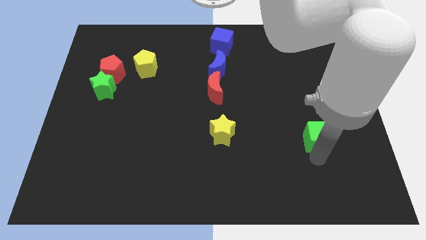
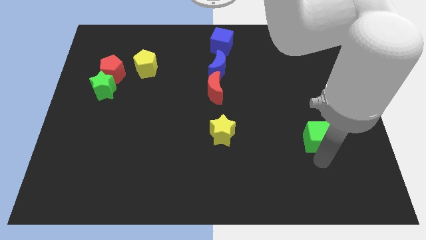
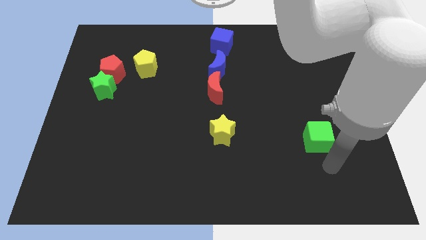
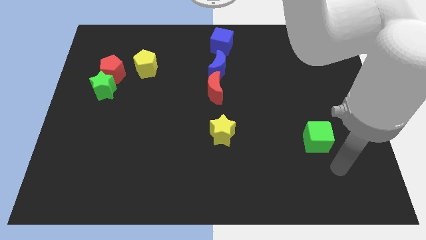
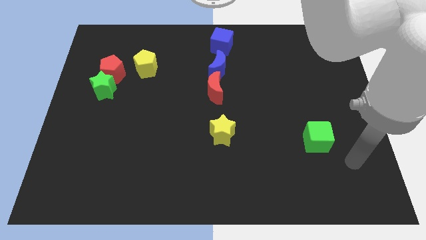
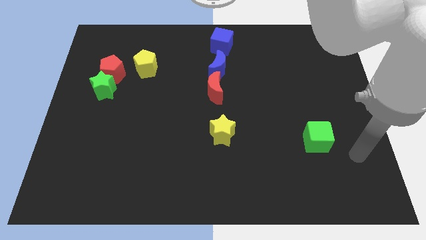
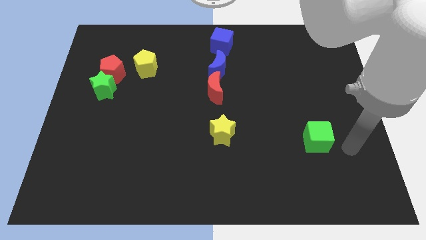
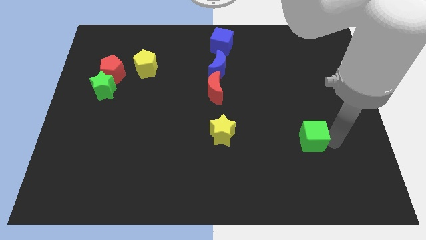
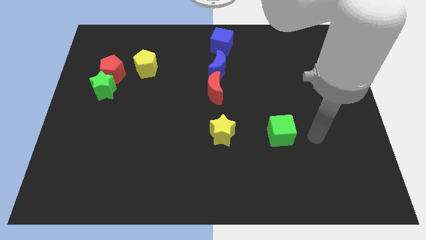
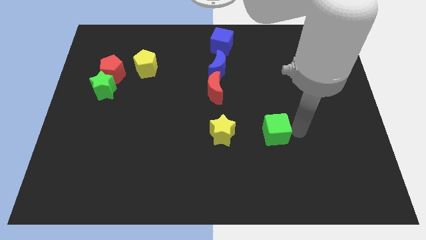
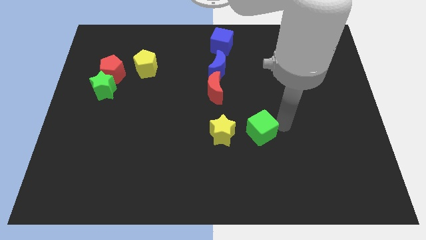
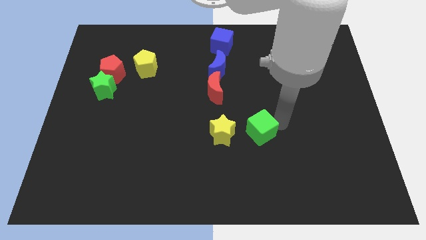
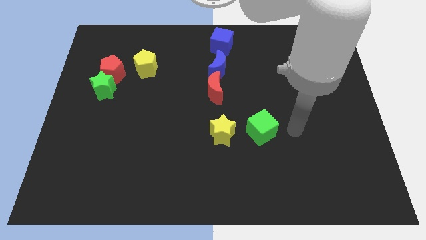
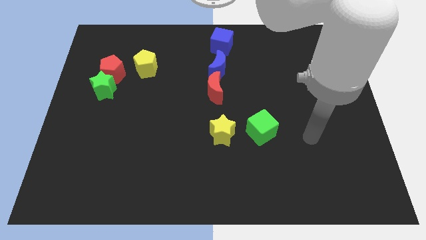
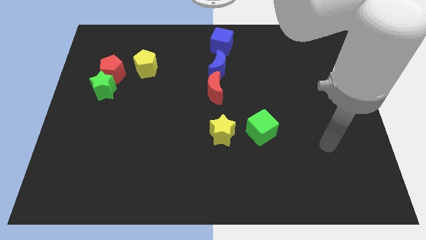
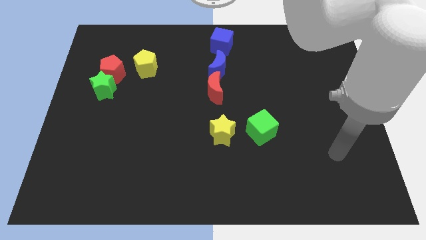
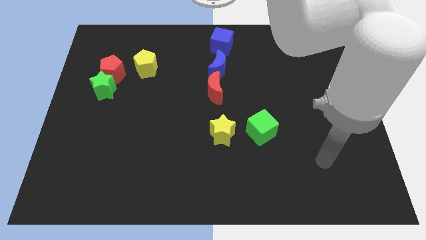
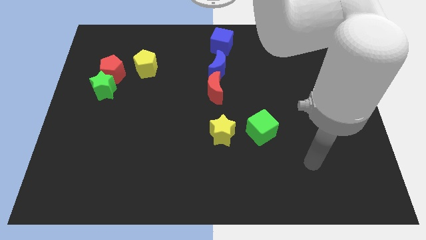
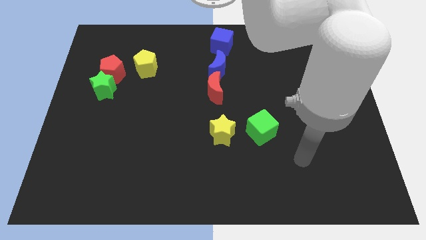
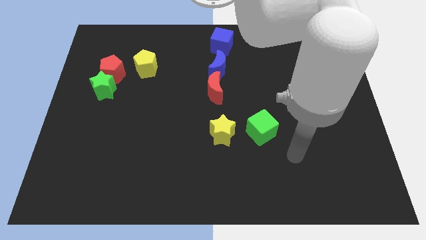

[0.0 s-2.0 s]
push green cube beside yellow star

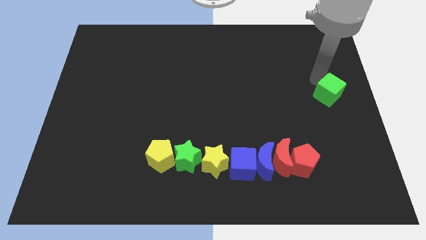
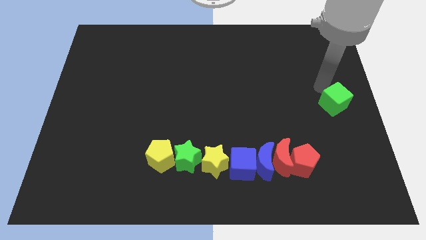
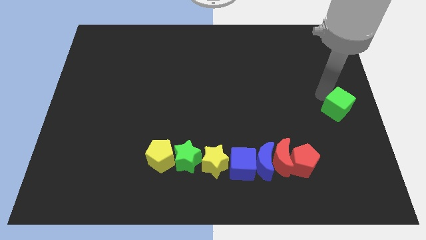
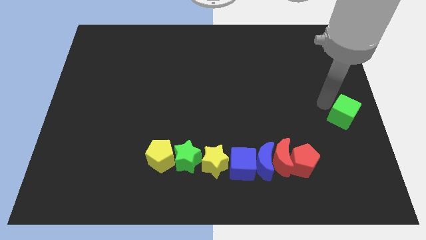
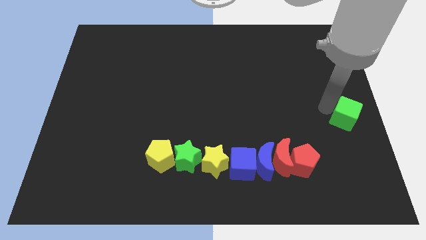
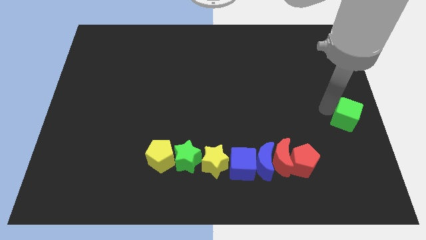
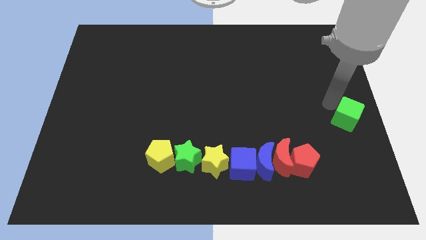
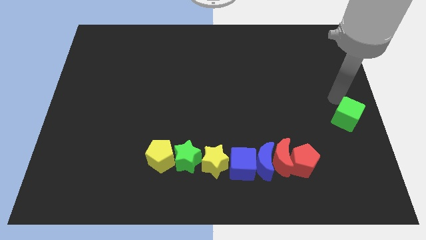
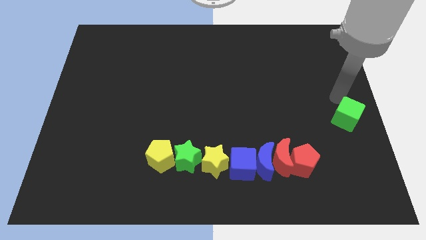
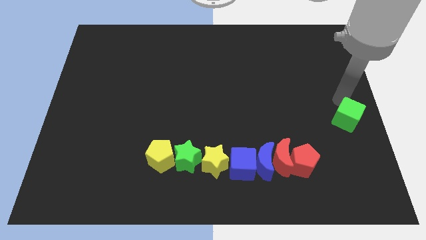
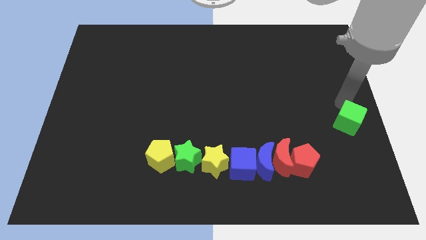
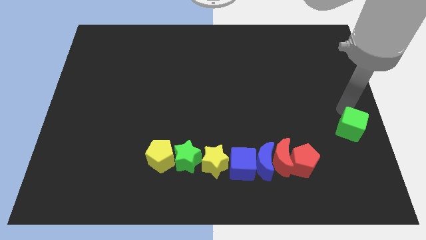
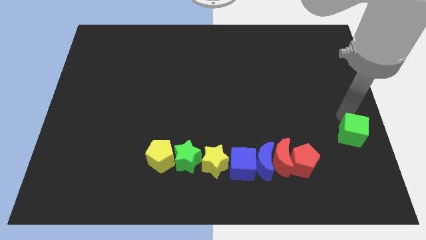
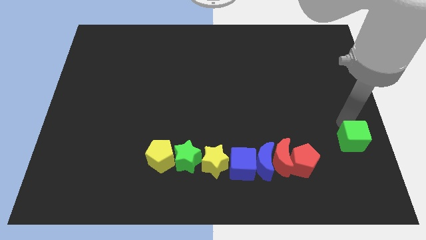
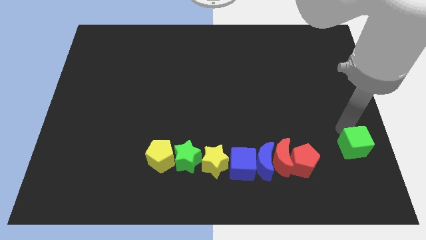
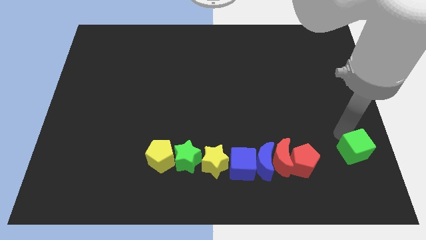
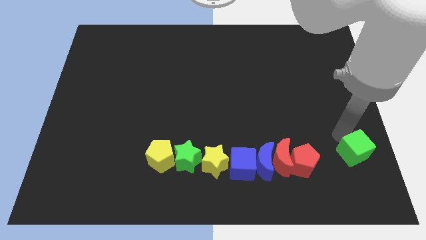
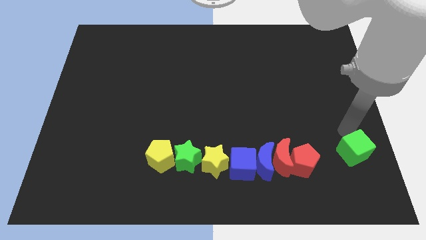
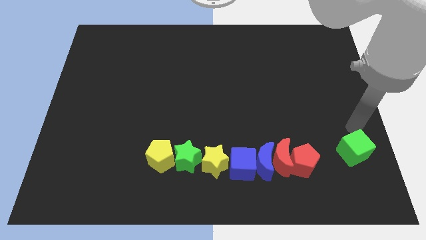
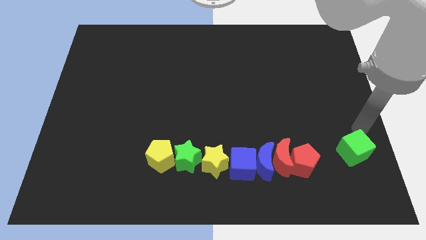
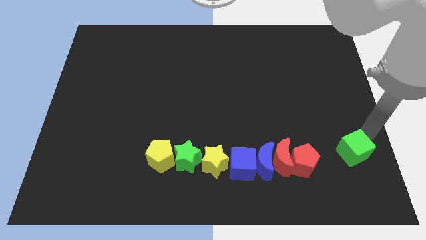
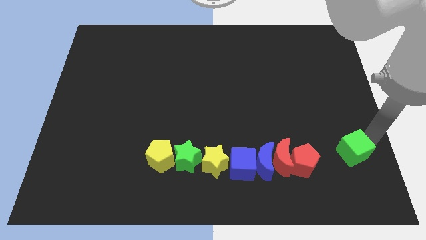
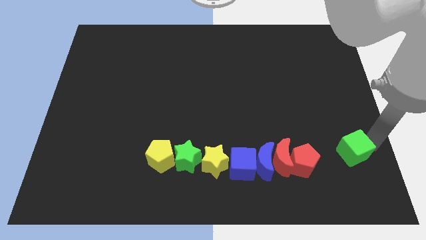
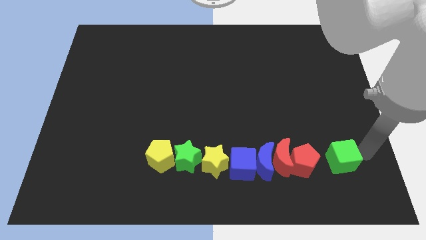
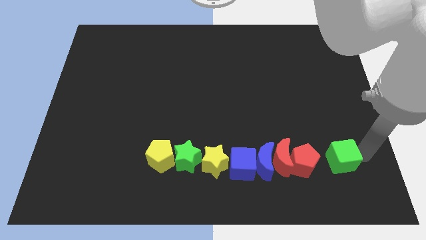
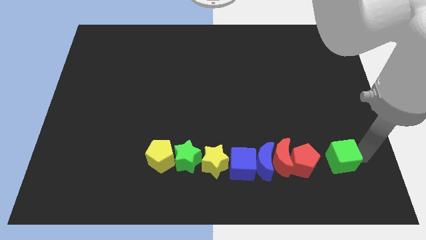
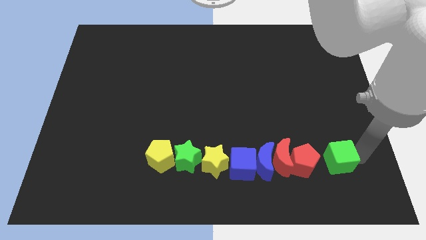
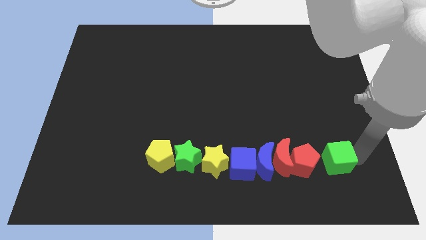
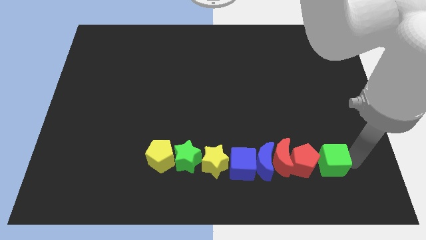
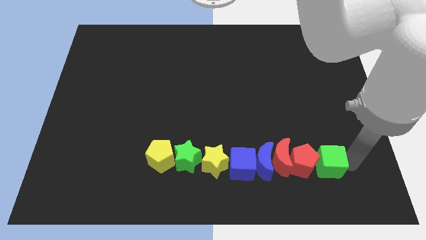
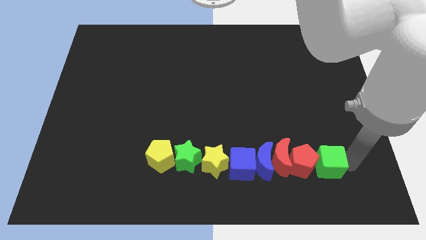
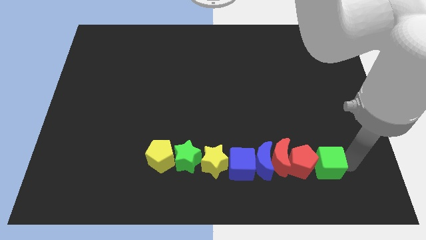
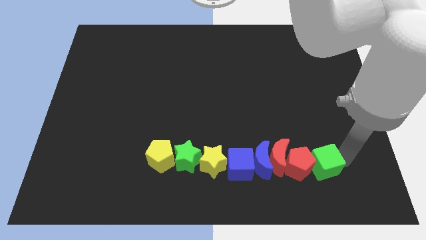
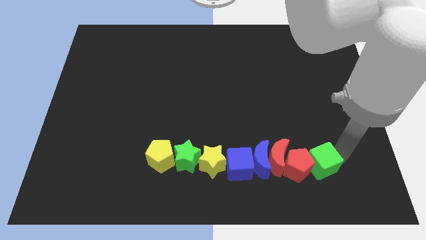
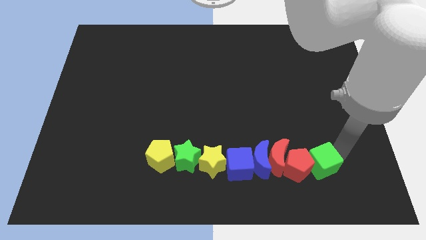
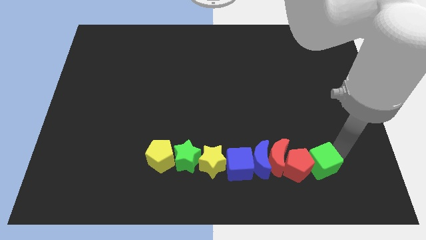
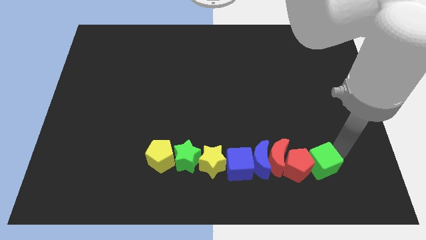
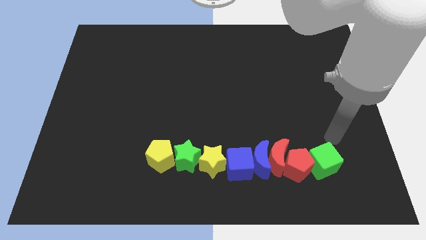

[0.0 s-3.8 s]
drag green cube to the right of the red pentagon to form a vertical line of blocks

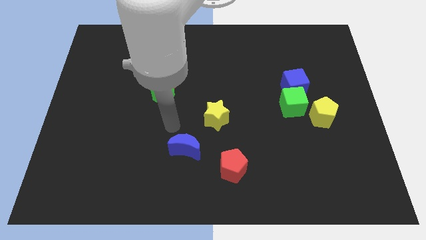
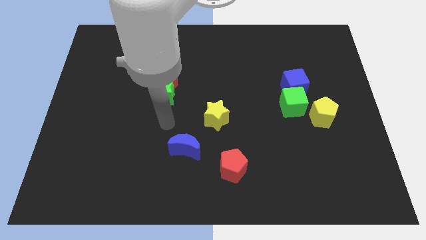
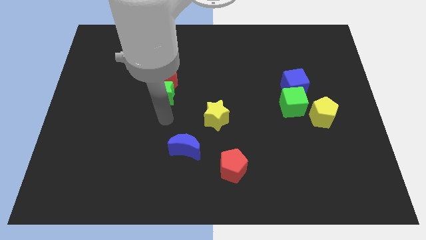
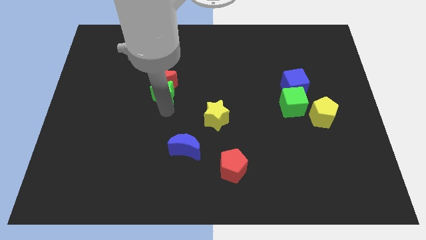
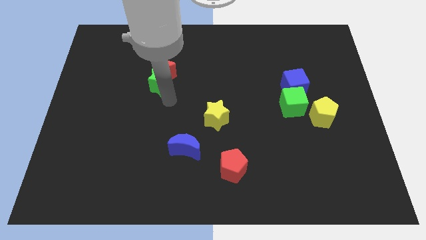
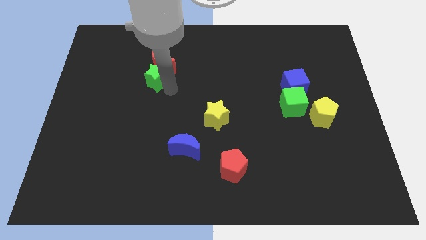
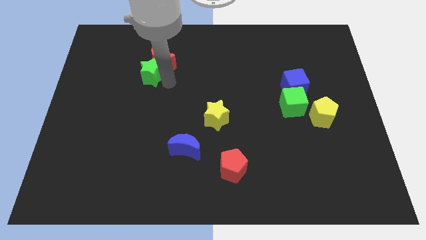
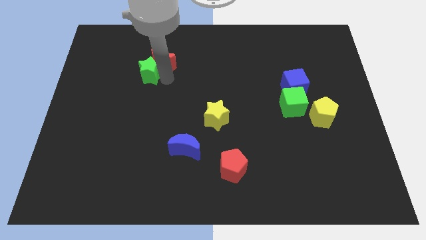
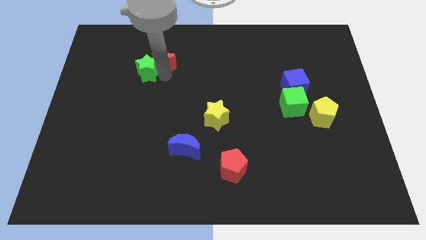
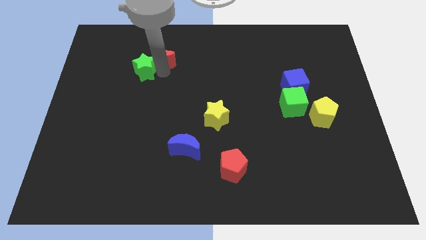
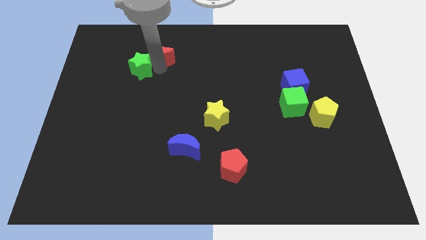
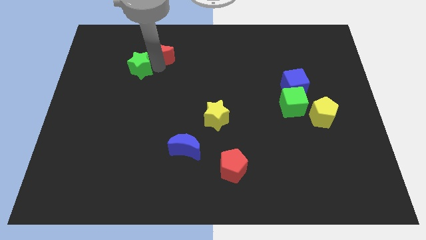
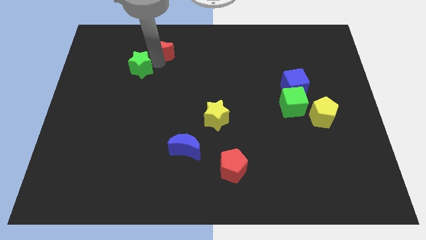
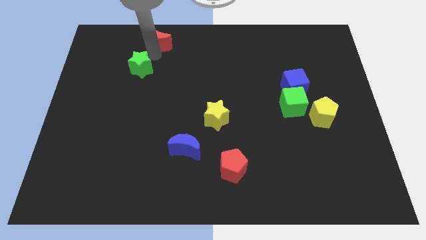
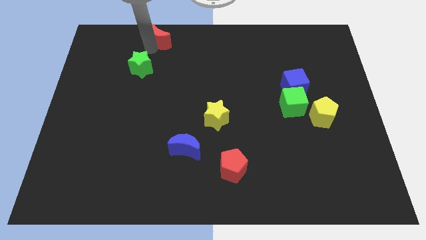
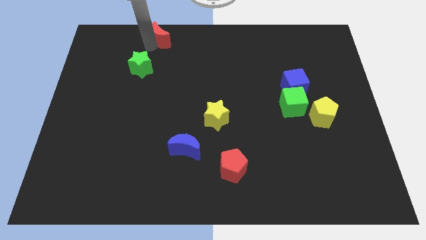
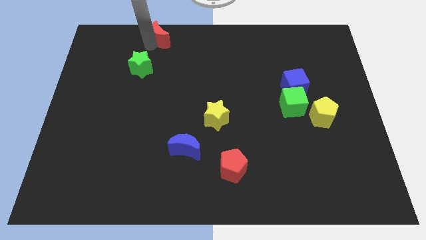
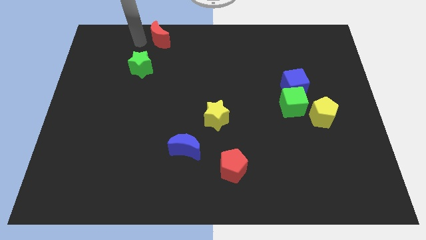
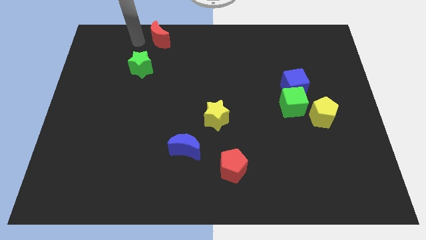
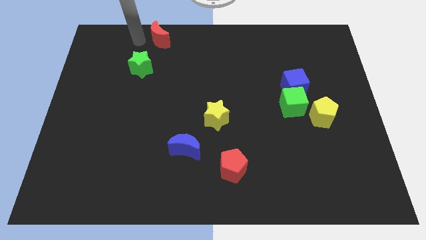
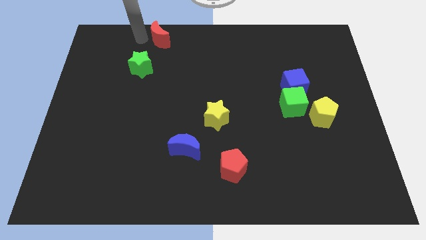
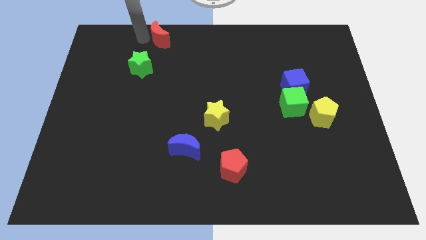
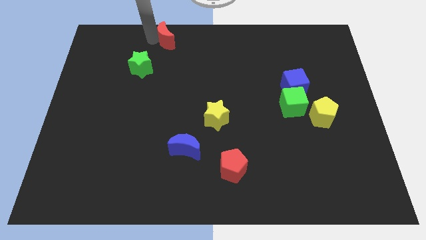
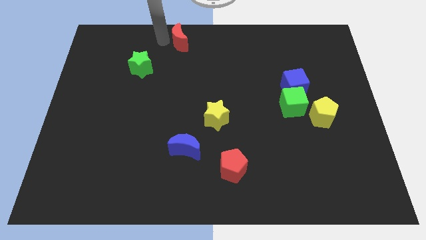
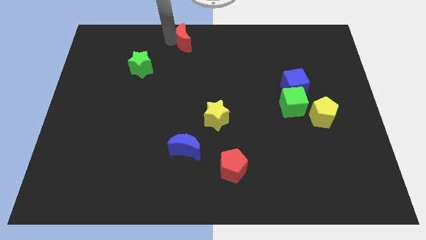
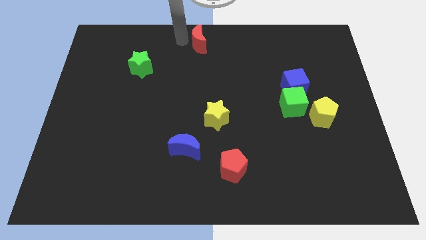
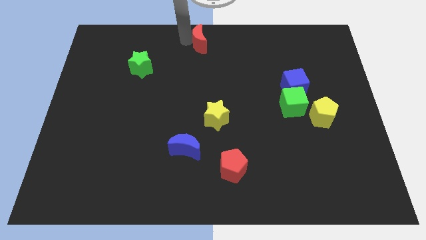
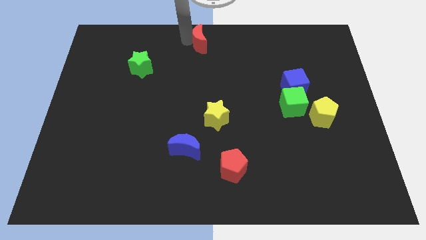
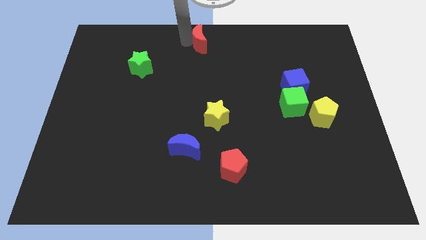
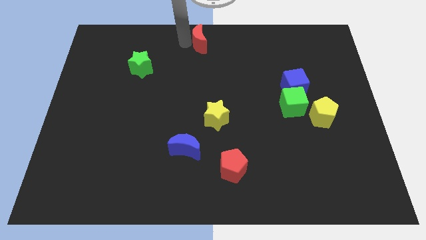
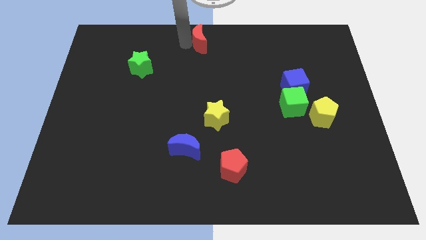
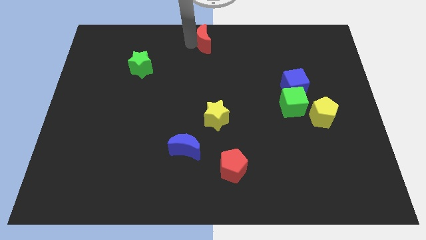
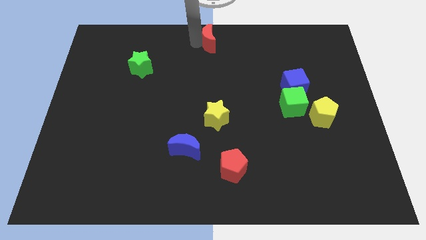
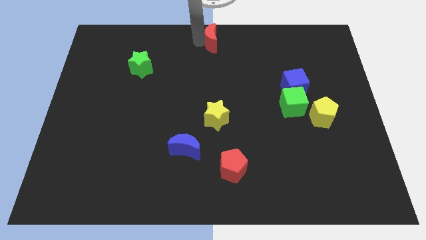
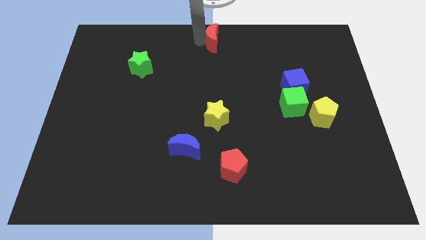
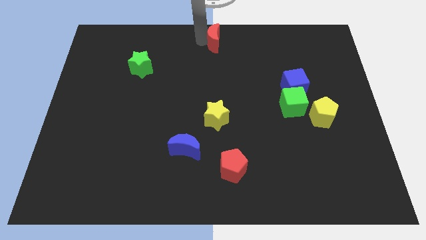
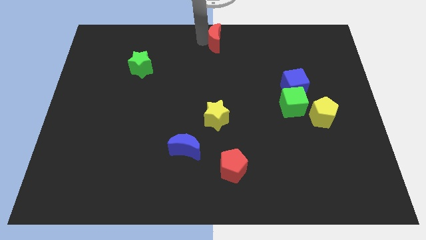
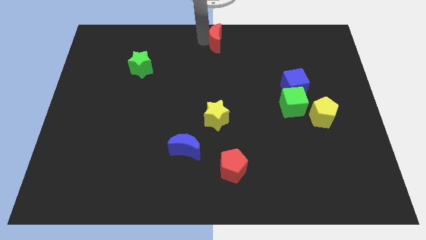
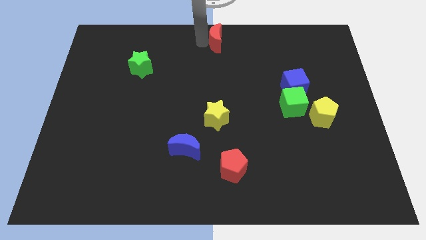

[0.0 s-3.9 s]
move the red moon to the top center
